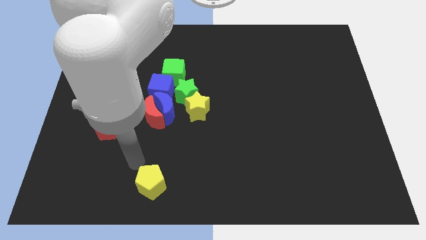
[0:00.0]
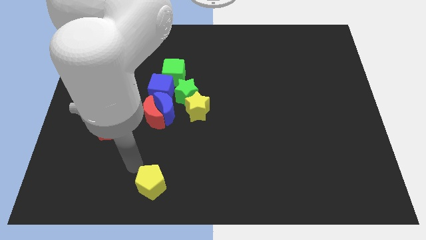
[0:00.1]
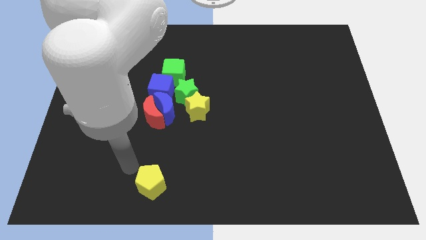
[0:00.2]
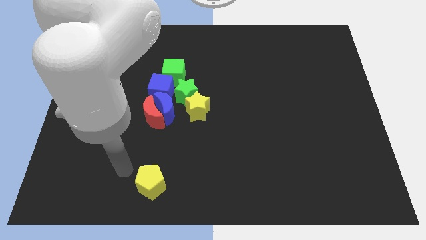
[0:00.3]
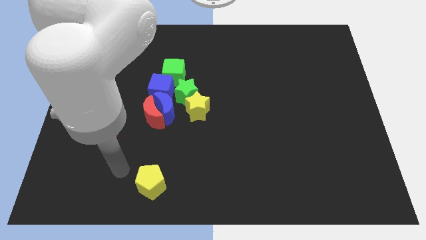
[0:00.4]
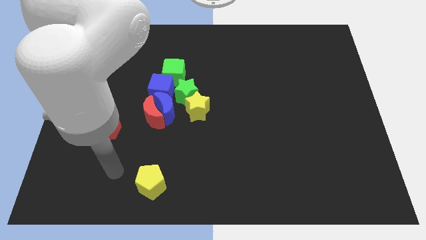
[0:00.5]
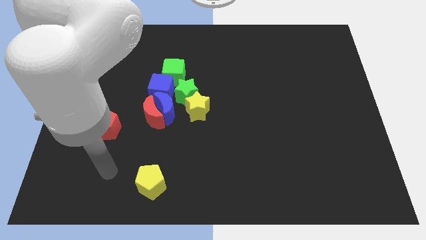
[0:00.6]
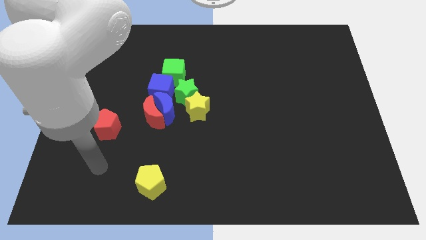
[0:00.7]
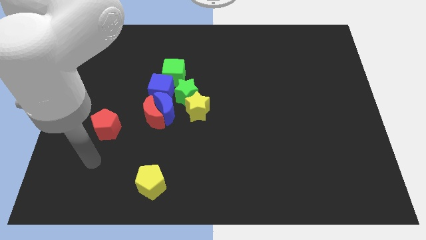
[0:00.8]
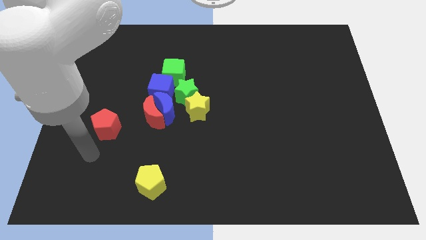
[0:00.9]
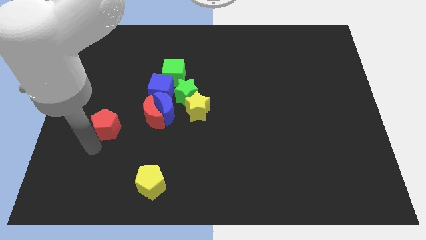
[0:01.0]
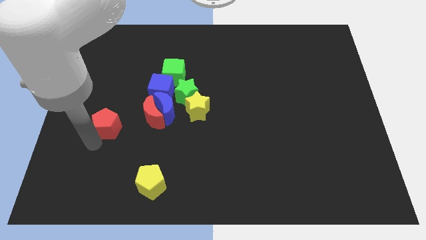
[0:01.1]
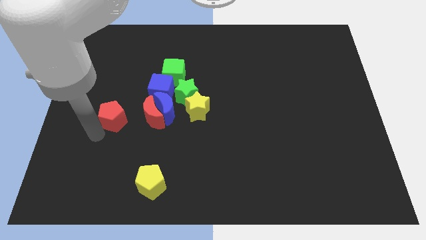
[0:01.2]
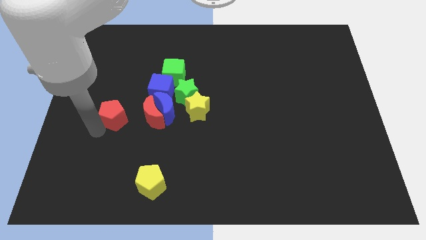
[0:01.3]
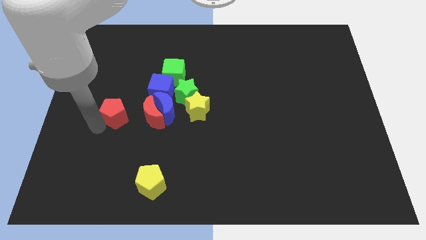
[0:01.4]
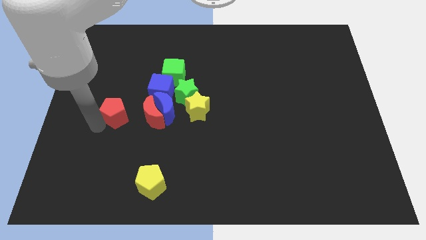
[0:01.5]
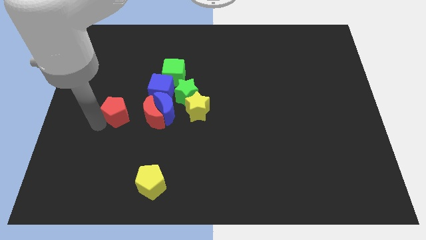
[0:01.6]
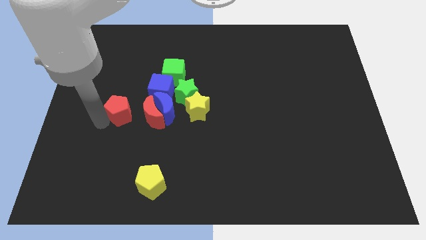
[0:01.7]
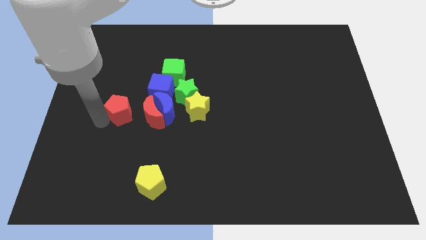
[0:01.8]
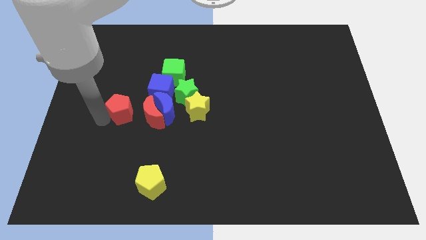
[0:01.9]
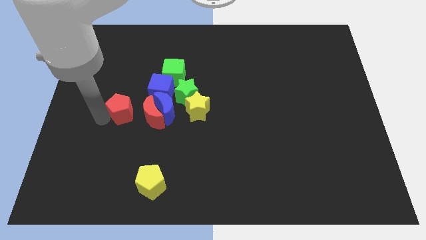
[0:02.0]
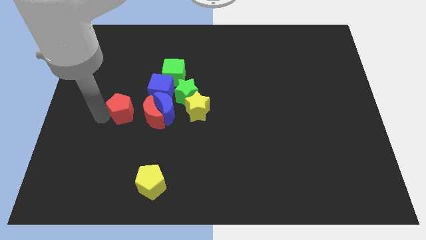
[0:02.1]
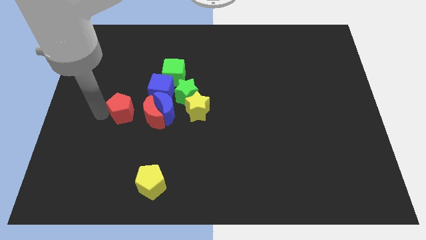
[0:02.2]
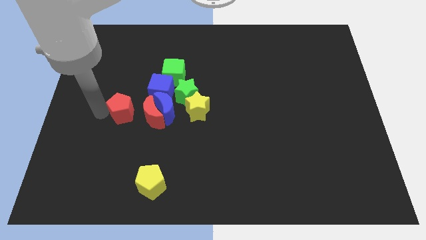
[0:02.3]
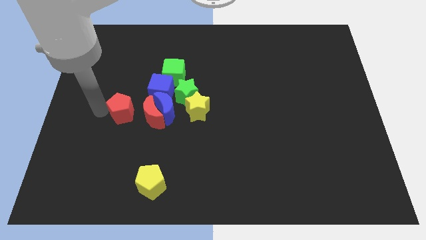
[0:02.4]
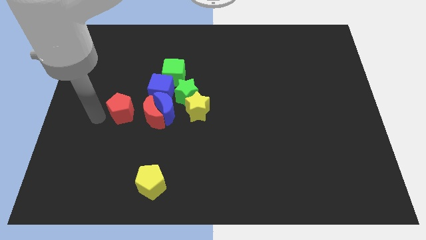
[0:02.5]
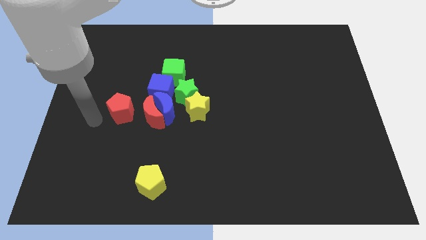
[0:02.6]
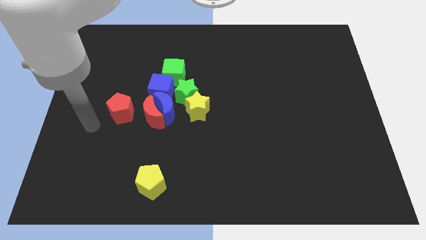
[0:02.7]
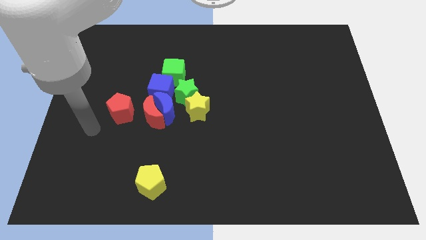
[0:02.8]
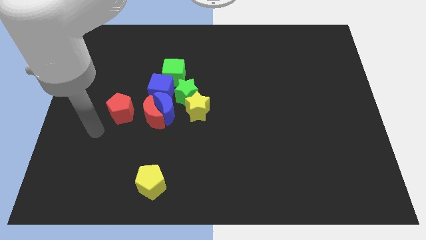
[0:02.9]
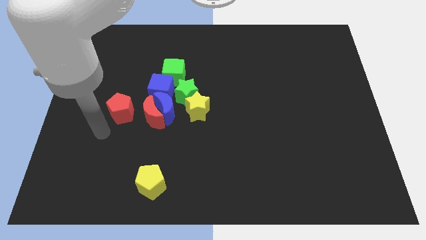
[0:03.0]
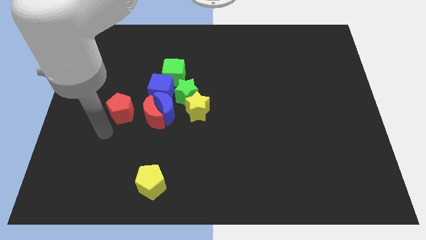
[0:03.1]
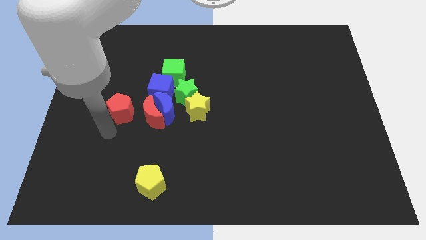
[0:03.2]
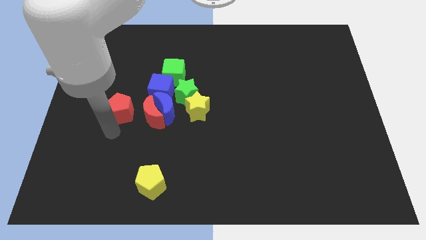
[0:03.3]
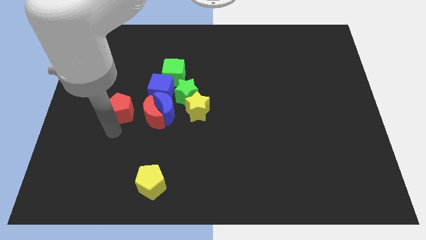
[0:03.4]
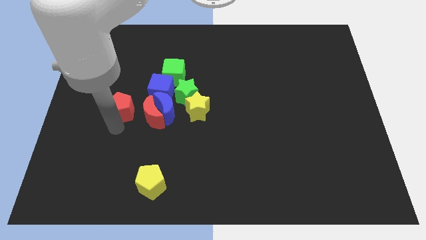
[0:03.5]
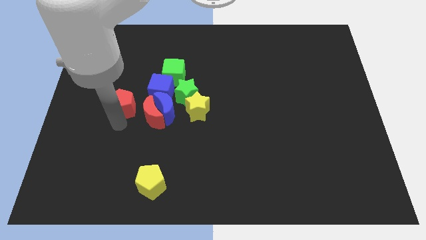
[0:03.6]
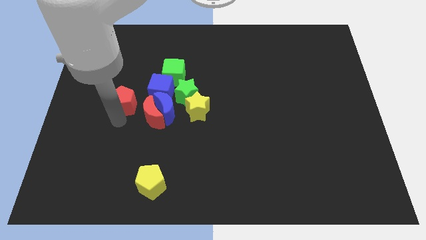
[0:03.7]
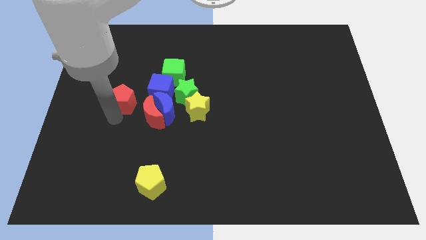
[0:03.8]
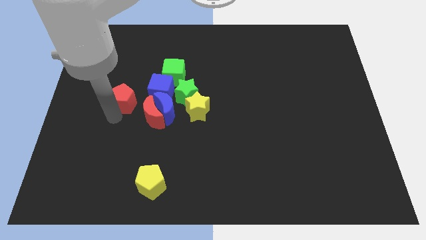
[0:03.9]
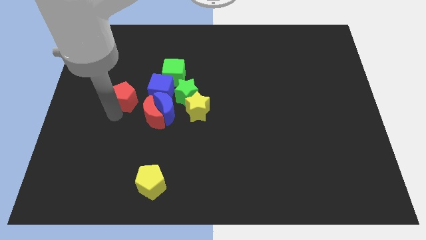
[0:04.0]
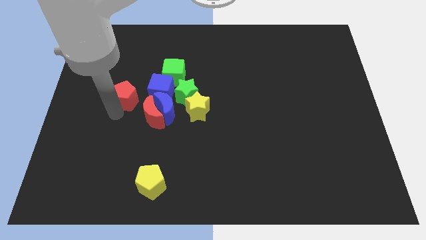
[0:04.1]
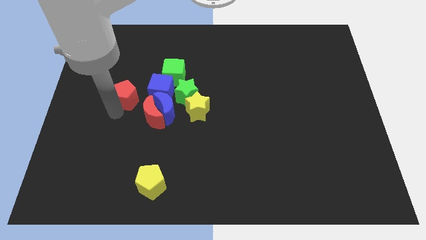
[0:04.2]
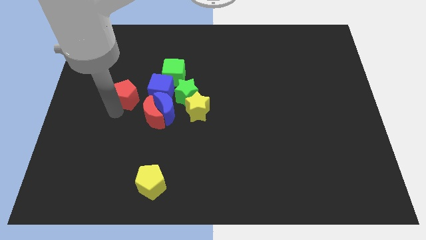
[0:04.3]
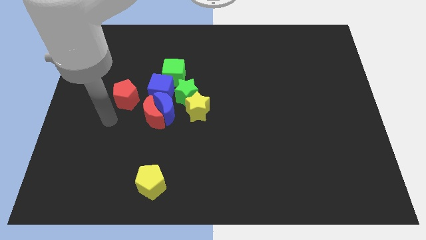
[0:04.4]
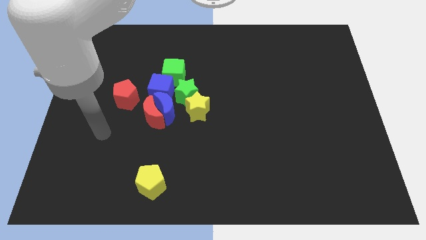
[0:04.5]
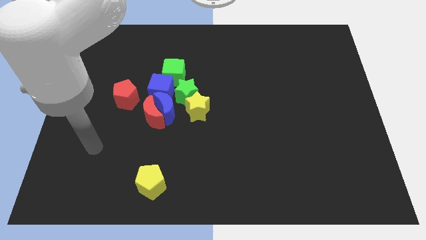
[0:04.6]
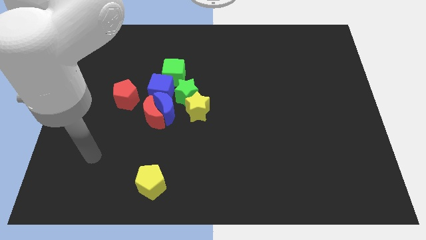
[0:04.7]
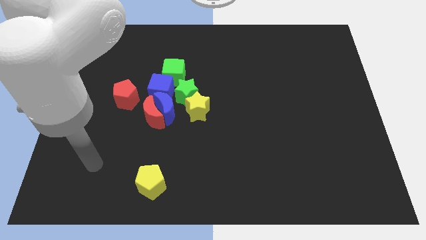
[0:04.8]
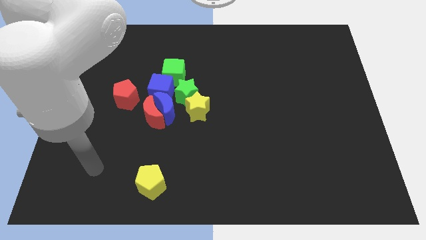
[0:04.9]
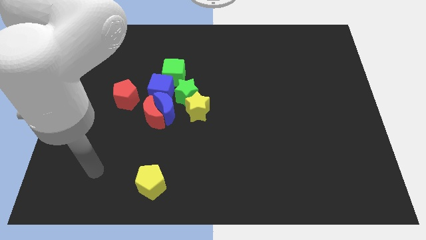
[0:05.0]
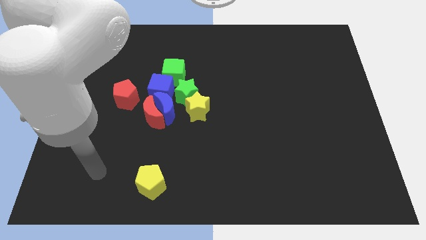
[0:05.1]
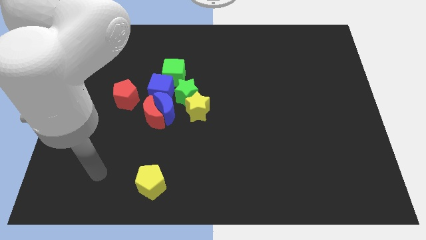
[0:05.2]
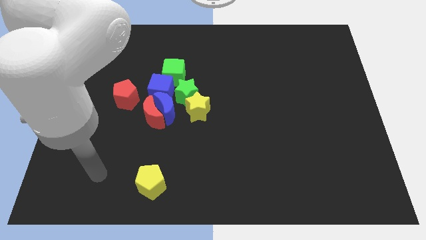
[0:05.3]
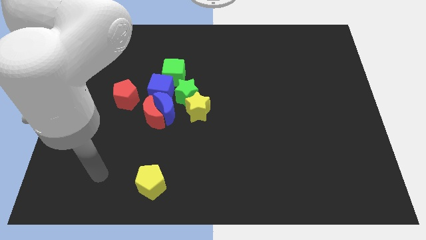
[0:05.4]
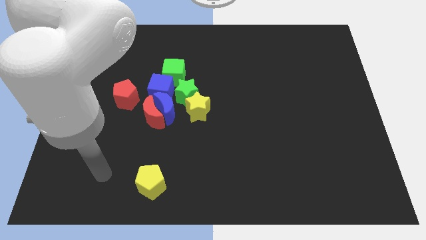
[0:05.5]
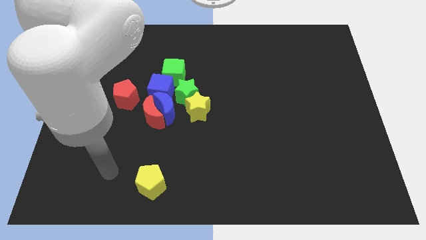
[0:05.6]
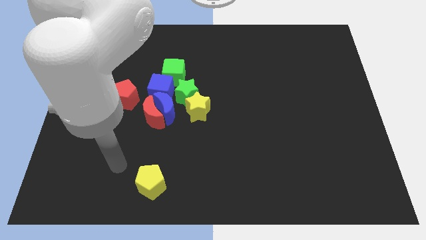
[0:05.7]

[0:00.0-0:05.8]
move the red pentagon slightly up

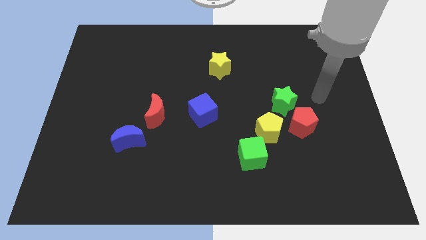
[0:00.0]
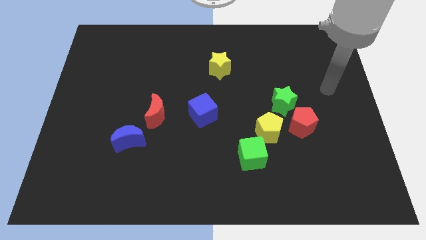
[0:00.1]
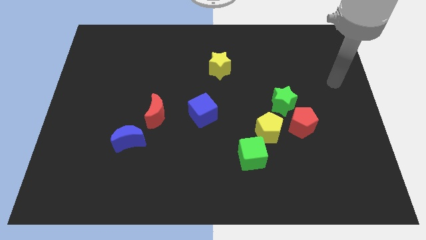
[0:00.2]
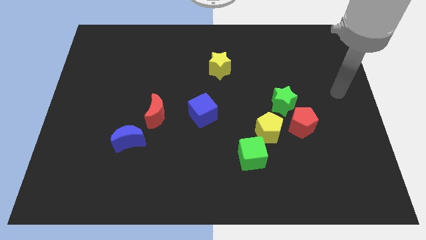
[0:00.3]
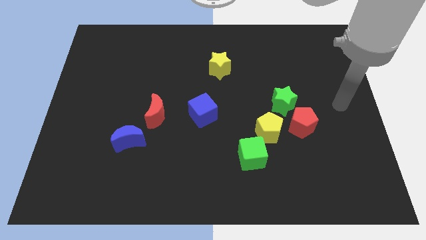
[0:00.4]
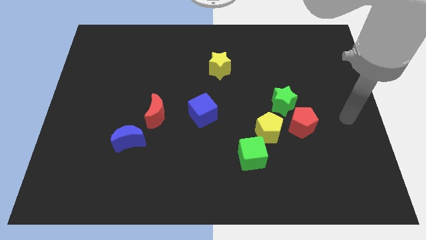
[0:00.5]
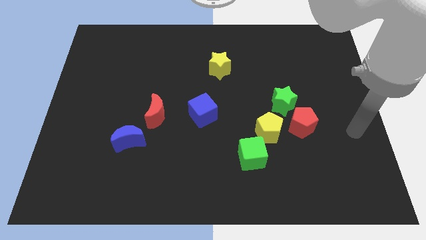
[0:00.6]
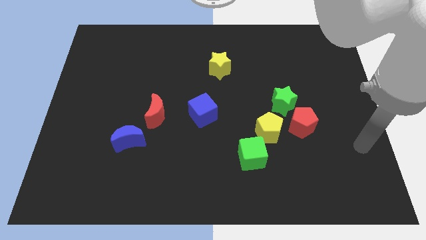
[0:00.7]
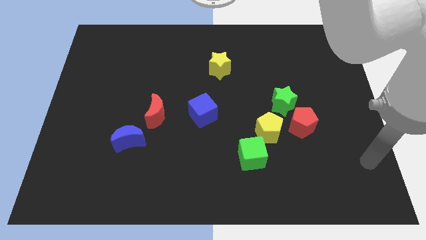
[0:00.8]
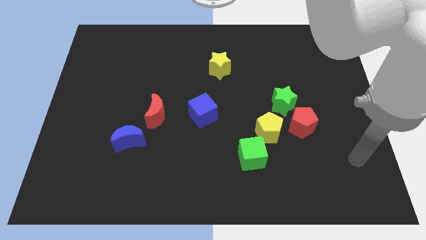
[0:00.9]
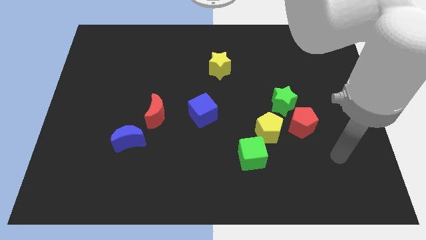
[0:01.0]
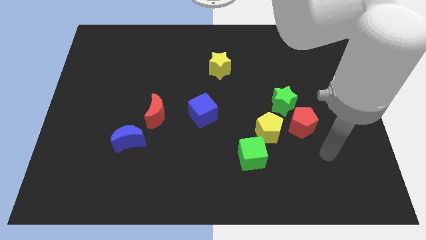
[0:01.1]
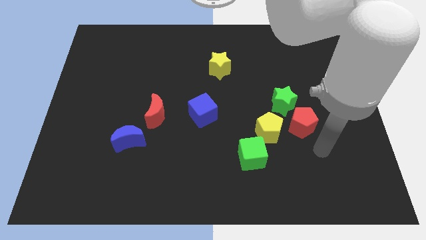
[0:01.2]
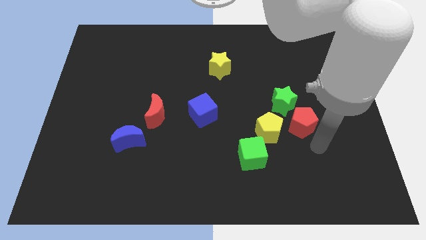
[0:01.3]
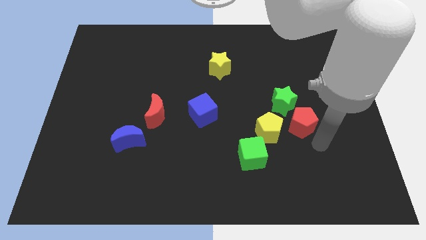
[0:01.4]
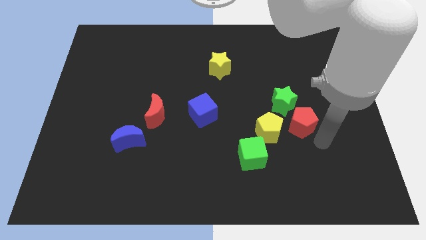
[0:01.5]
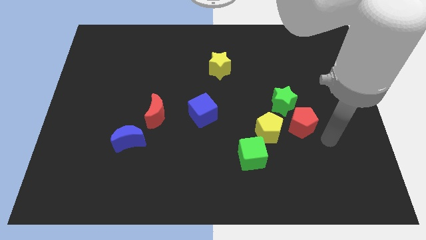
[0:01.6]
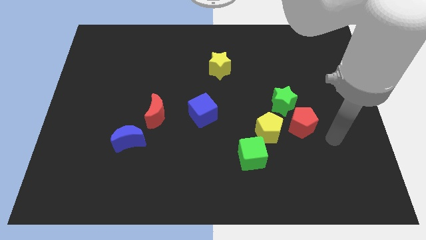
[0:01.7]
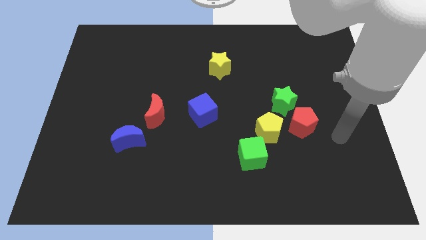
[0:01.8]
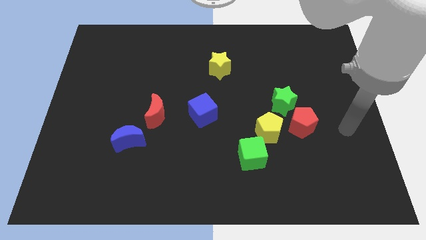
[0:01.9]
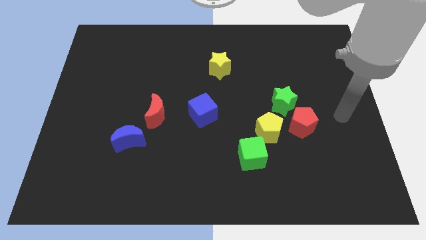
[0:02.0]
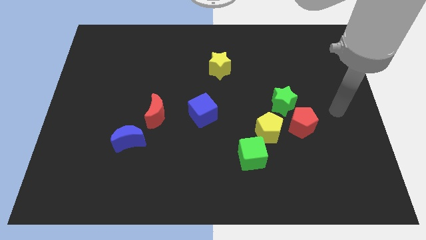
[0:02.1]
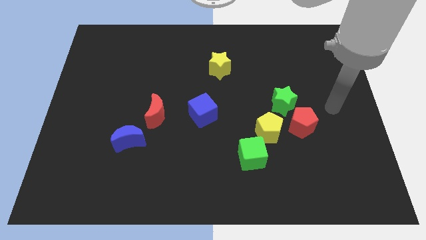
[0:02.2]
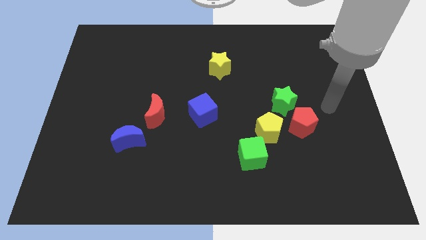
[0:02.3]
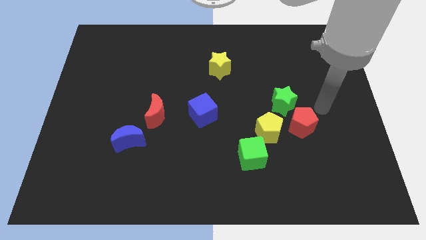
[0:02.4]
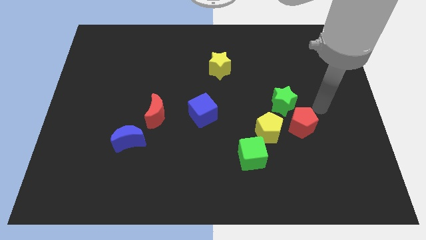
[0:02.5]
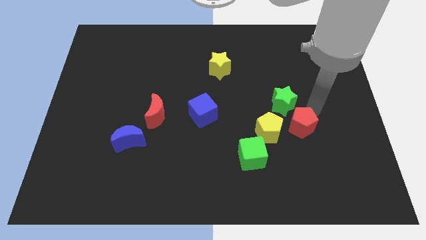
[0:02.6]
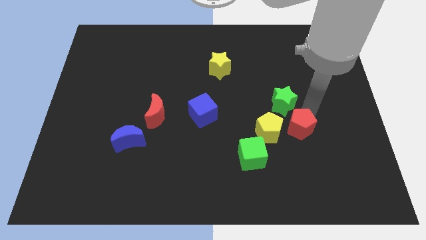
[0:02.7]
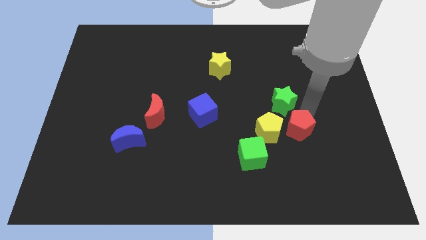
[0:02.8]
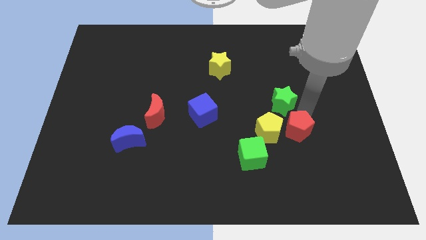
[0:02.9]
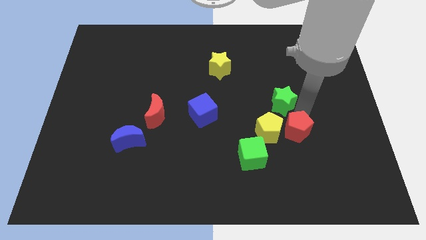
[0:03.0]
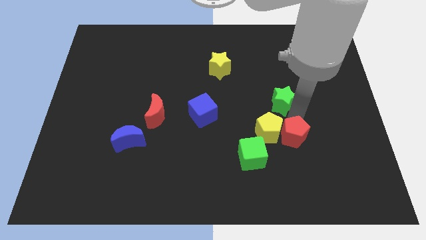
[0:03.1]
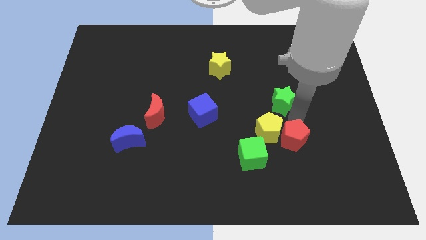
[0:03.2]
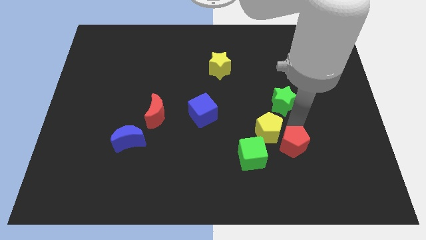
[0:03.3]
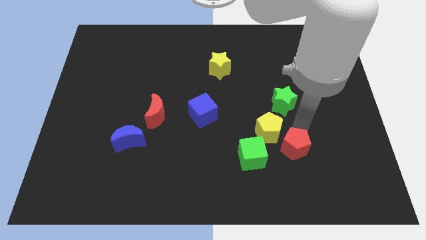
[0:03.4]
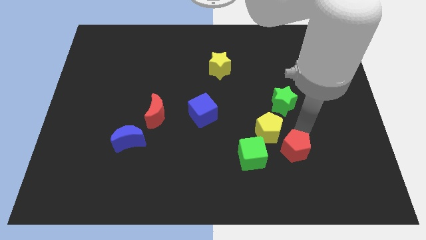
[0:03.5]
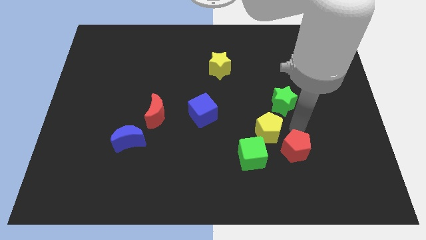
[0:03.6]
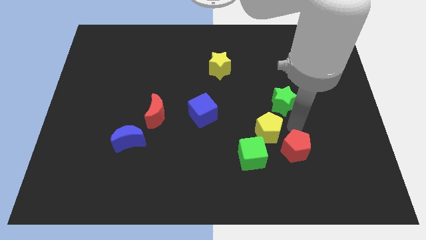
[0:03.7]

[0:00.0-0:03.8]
move red pentagon downwards
